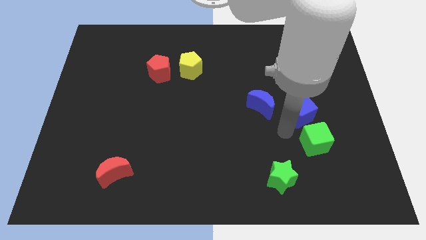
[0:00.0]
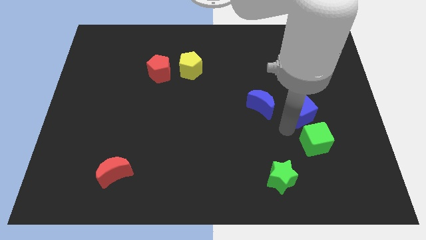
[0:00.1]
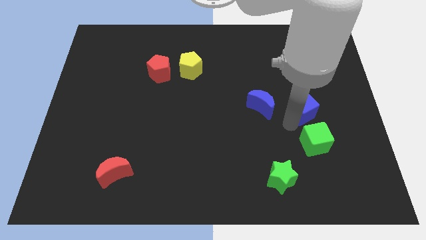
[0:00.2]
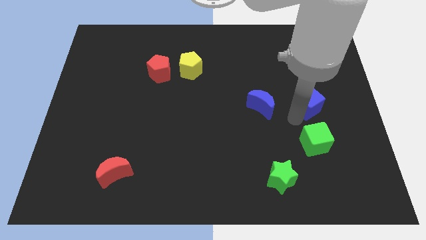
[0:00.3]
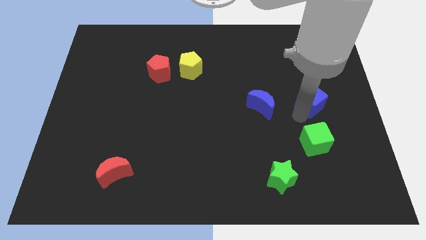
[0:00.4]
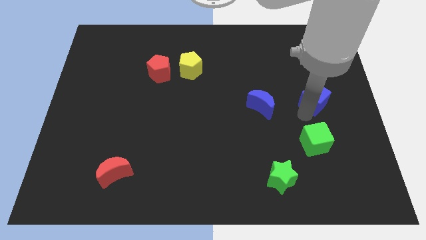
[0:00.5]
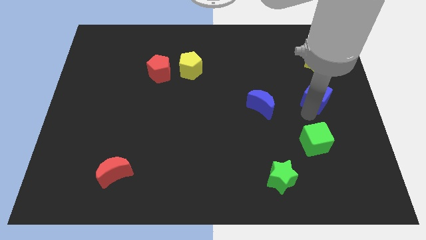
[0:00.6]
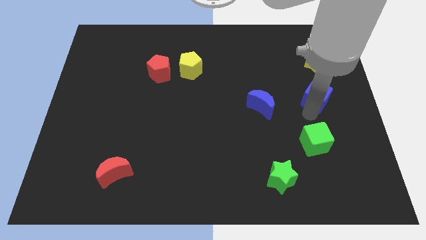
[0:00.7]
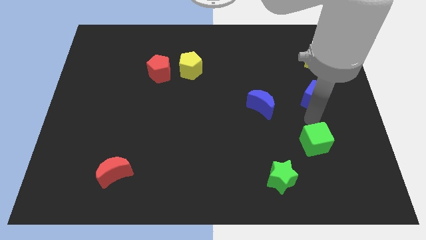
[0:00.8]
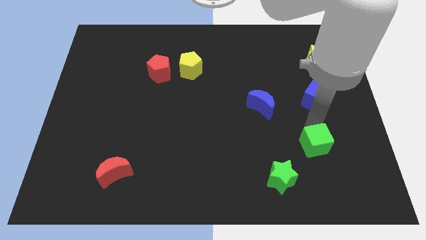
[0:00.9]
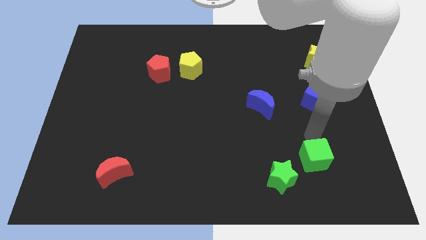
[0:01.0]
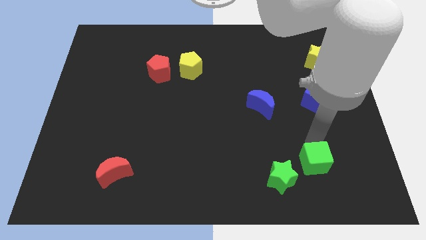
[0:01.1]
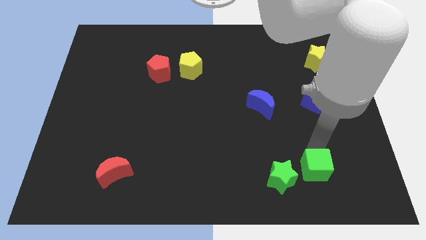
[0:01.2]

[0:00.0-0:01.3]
separate the green cube from blue cube

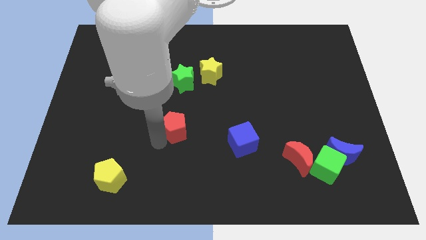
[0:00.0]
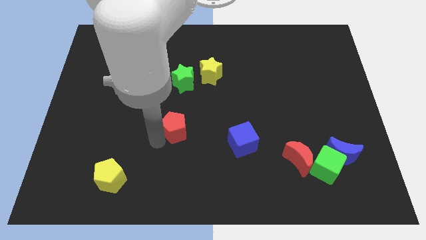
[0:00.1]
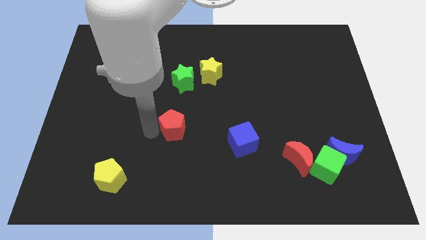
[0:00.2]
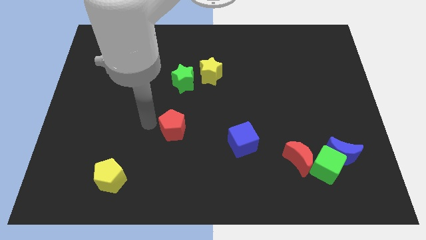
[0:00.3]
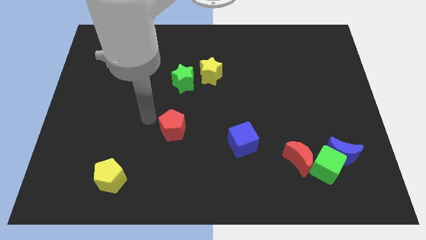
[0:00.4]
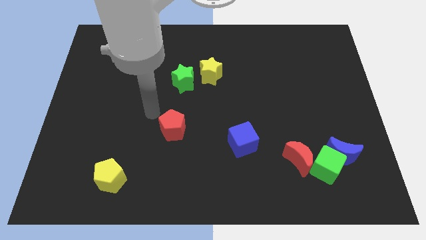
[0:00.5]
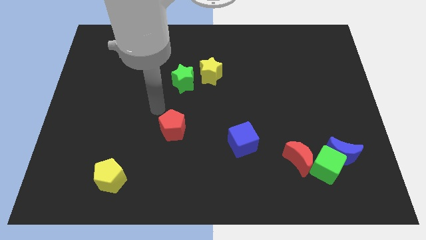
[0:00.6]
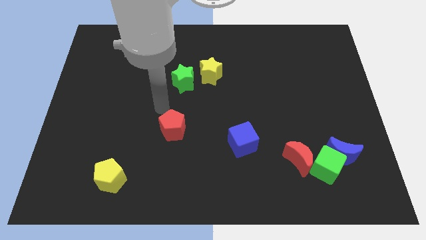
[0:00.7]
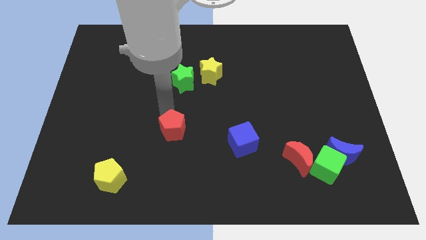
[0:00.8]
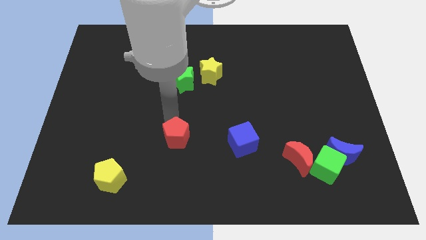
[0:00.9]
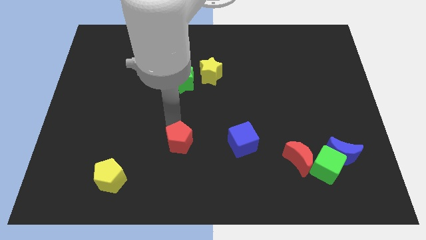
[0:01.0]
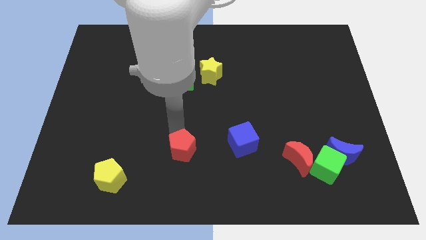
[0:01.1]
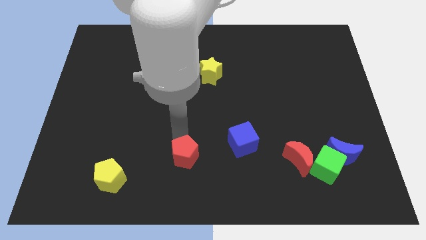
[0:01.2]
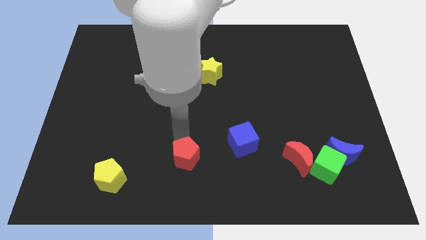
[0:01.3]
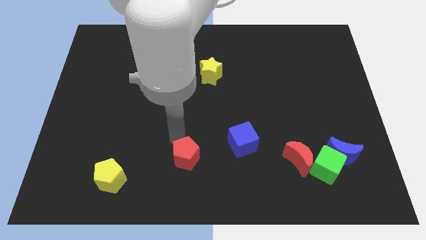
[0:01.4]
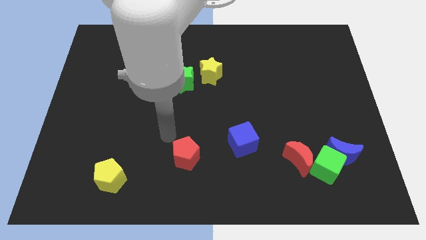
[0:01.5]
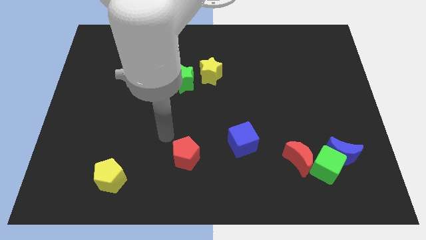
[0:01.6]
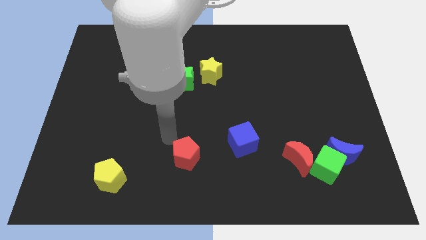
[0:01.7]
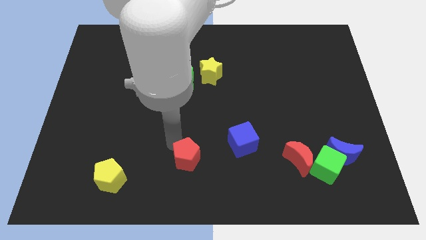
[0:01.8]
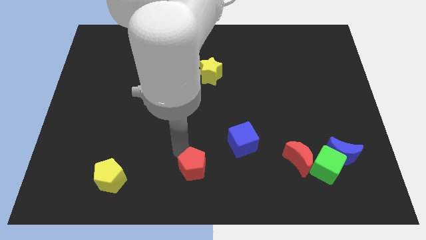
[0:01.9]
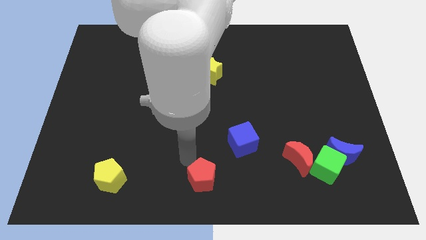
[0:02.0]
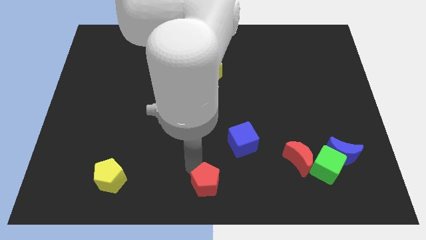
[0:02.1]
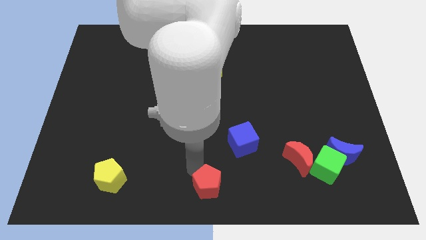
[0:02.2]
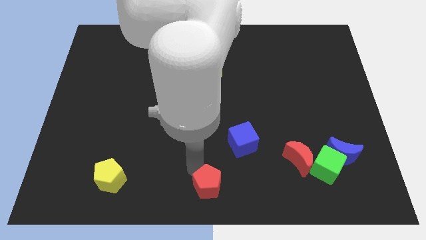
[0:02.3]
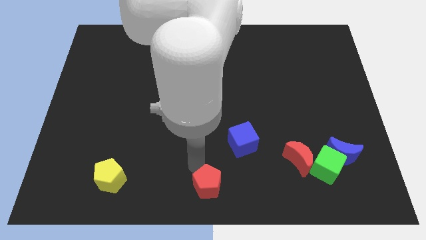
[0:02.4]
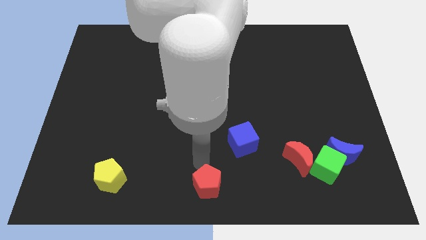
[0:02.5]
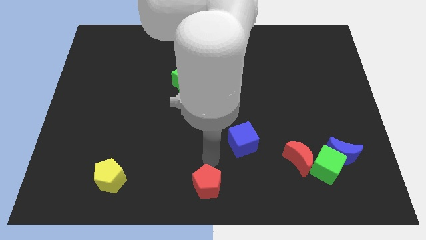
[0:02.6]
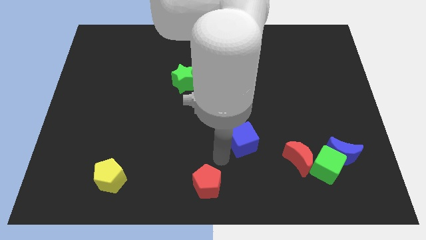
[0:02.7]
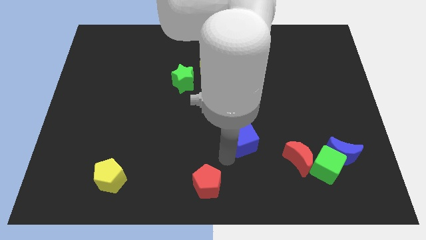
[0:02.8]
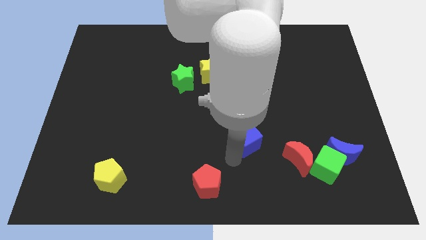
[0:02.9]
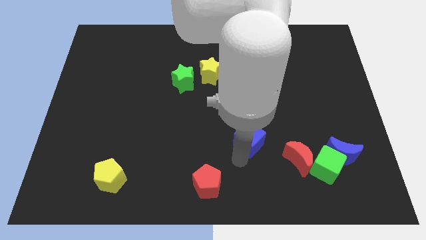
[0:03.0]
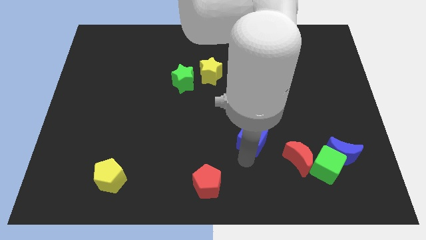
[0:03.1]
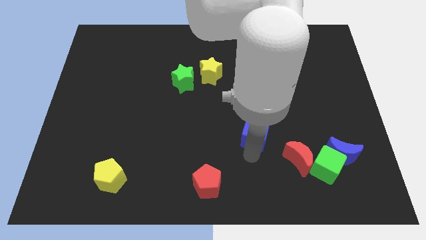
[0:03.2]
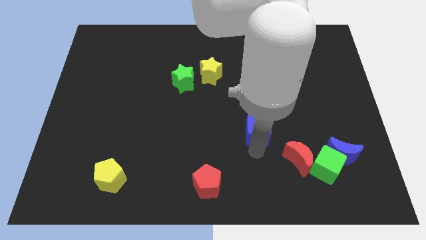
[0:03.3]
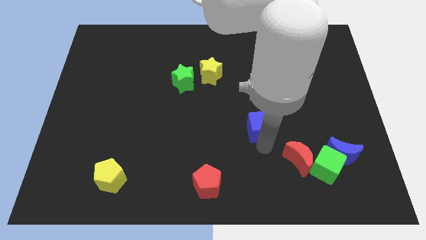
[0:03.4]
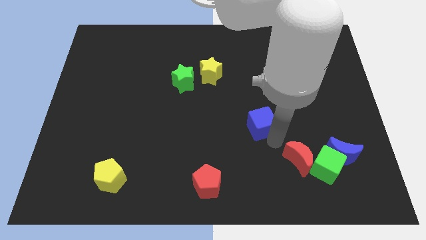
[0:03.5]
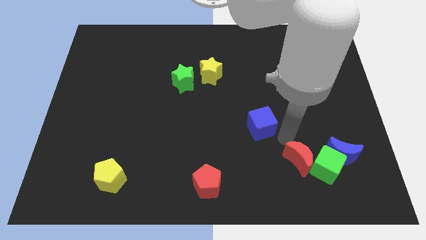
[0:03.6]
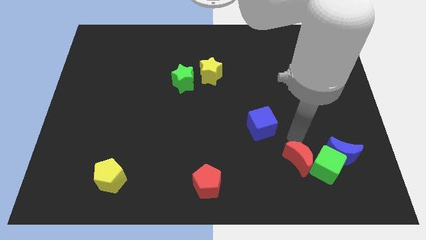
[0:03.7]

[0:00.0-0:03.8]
move the red pentagon towards the center bottom of the board

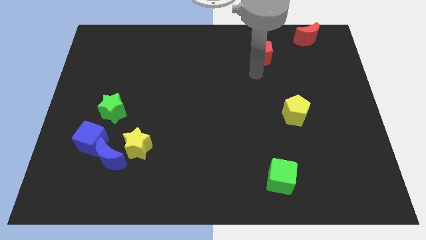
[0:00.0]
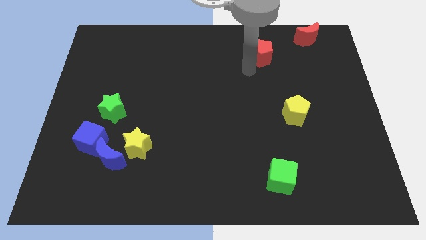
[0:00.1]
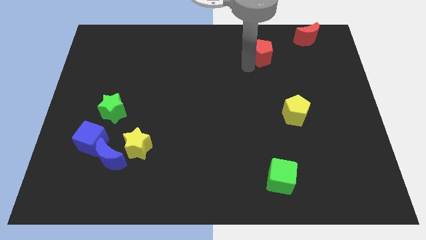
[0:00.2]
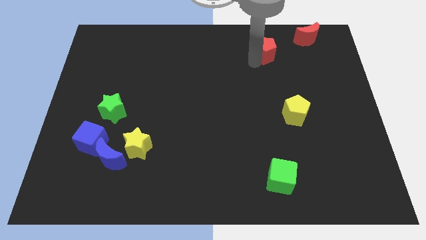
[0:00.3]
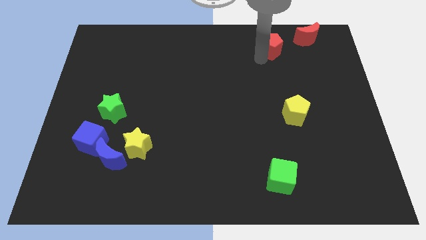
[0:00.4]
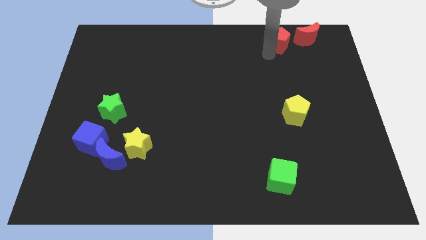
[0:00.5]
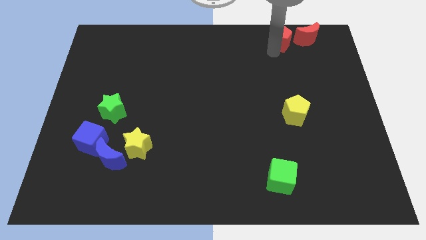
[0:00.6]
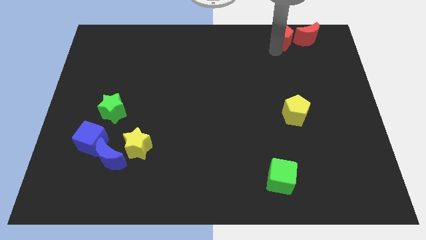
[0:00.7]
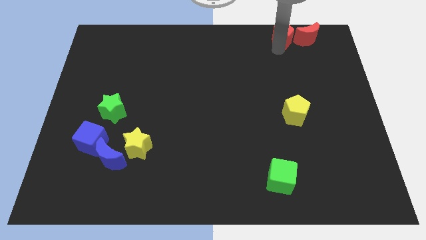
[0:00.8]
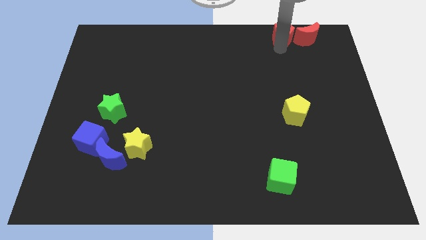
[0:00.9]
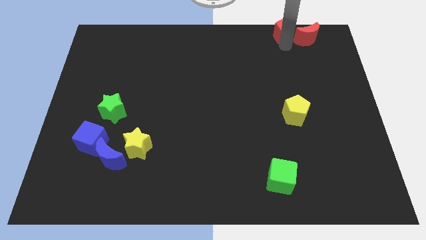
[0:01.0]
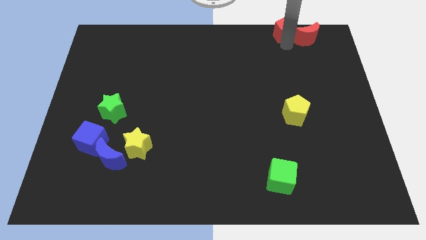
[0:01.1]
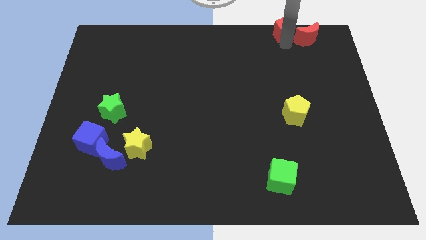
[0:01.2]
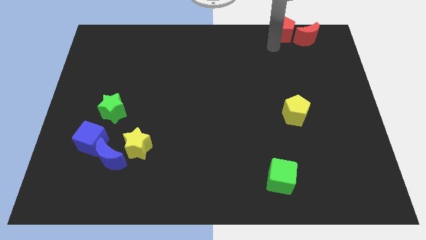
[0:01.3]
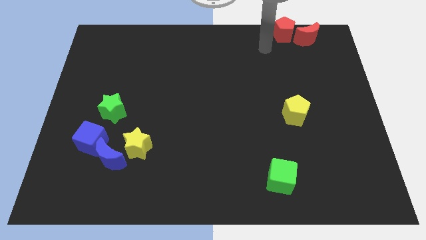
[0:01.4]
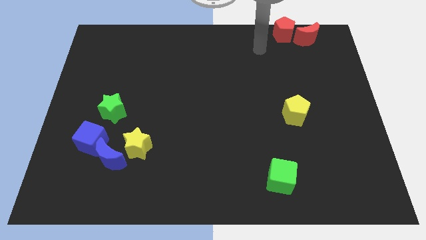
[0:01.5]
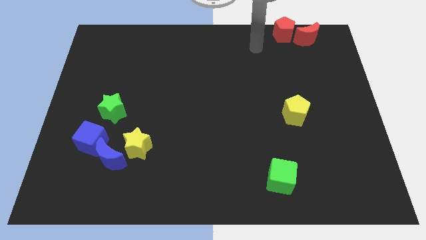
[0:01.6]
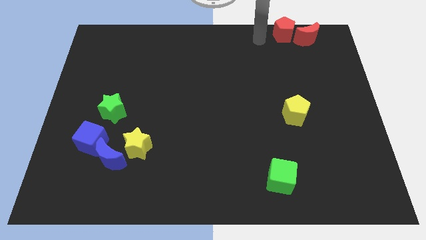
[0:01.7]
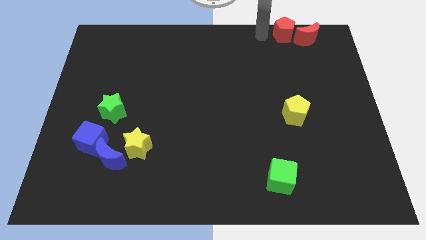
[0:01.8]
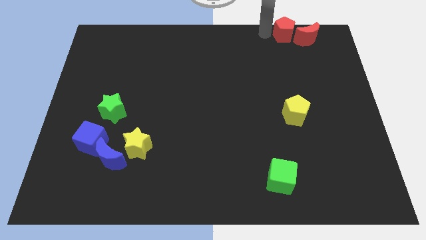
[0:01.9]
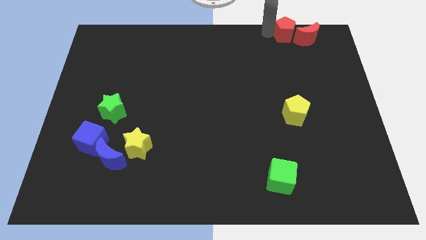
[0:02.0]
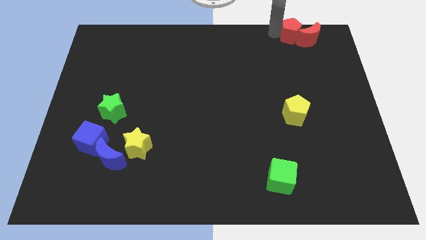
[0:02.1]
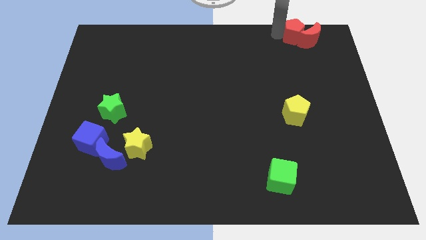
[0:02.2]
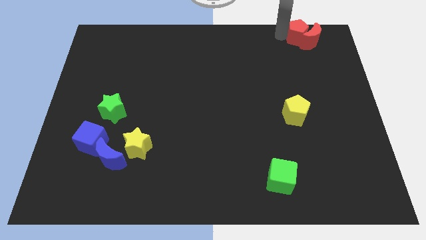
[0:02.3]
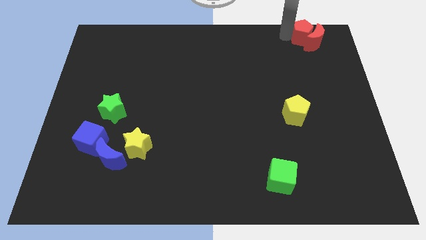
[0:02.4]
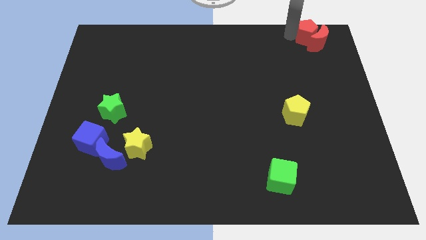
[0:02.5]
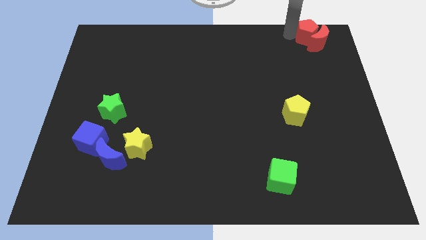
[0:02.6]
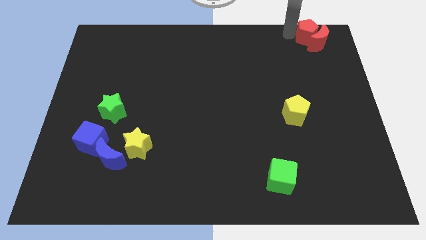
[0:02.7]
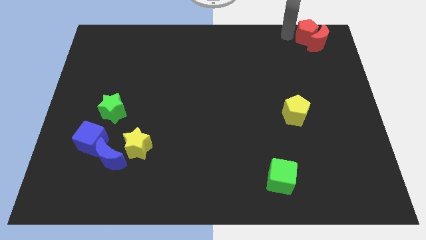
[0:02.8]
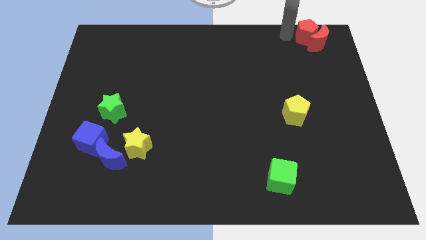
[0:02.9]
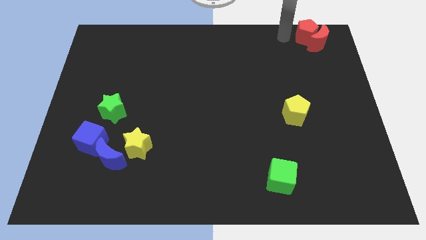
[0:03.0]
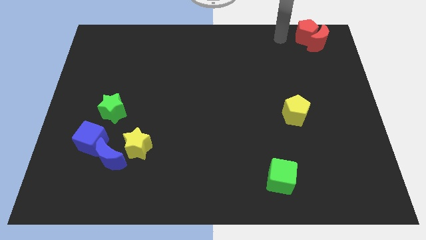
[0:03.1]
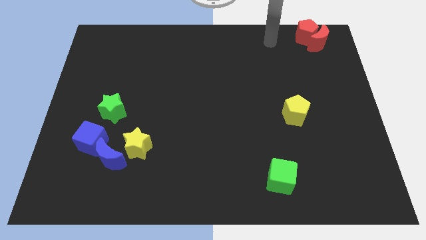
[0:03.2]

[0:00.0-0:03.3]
move the red pentagon into the red crescent

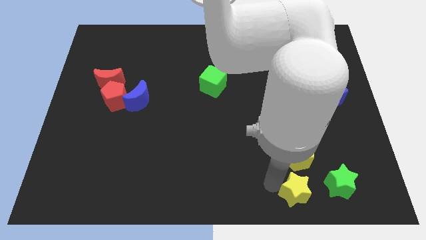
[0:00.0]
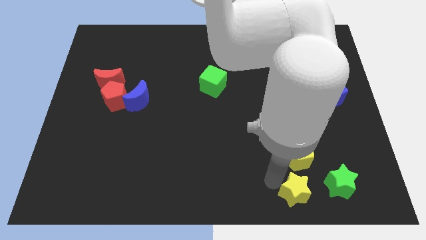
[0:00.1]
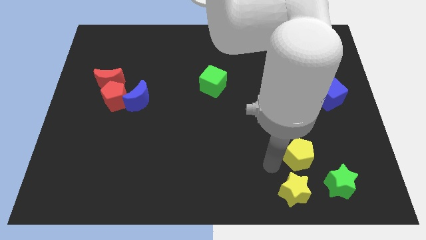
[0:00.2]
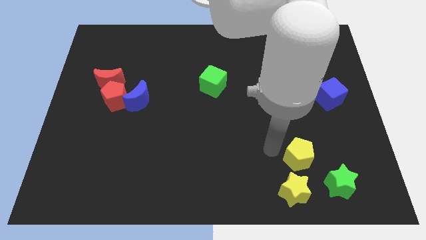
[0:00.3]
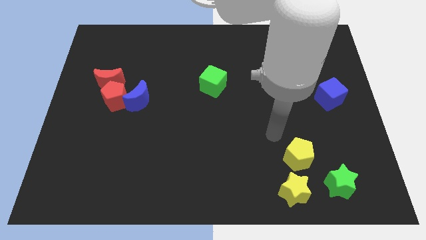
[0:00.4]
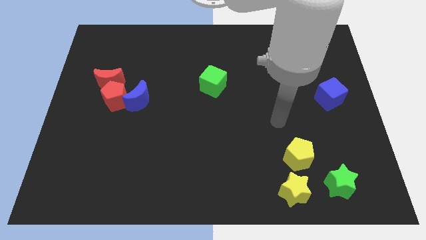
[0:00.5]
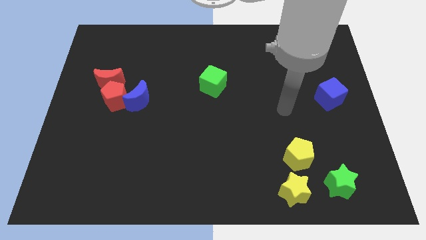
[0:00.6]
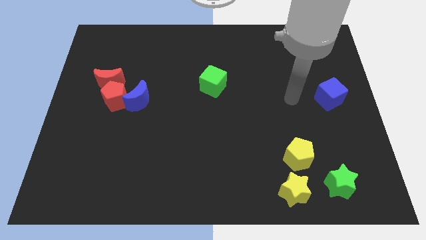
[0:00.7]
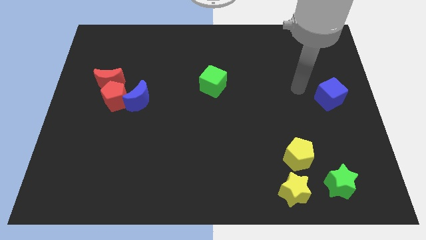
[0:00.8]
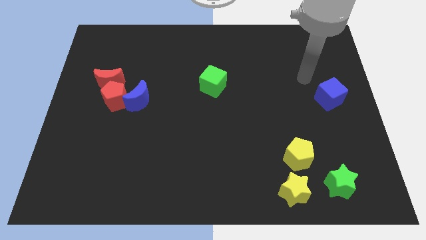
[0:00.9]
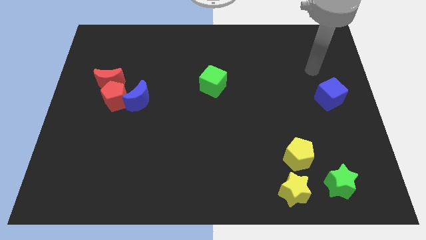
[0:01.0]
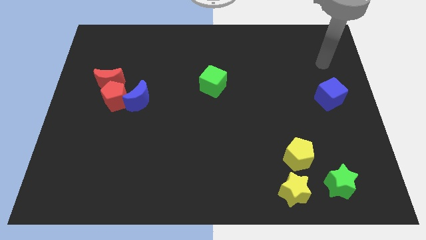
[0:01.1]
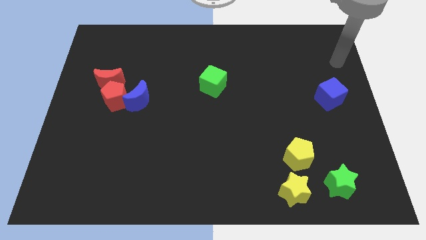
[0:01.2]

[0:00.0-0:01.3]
move your arm away from the yellow star
